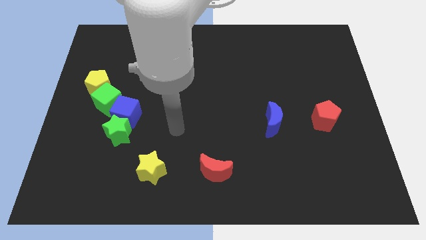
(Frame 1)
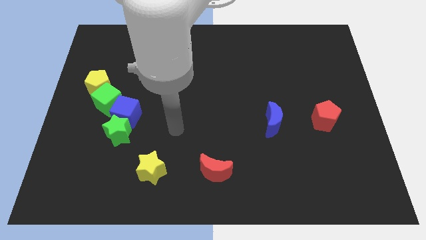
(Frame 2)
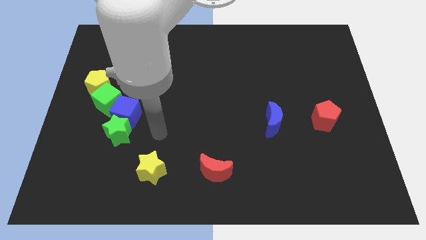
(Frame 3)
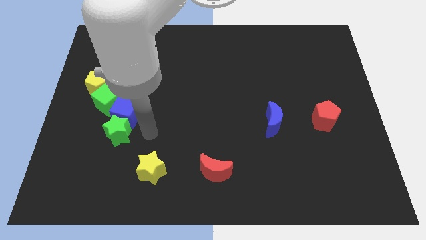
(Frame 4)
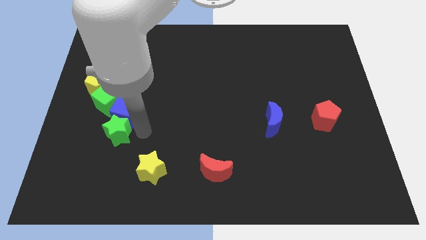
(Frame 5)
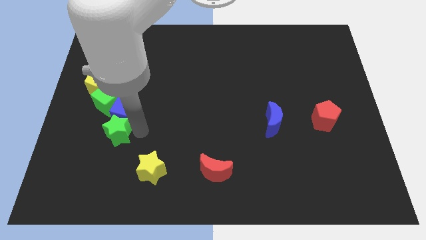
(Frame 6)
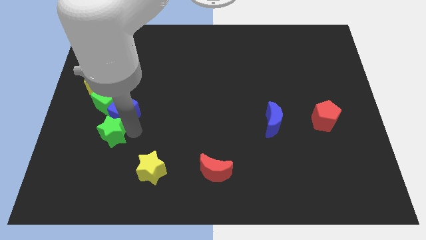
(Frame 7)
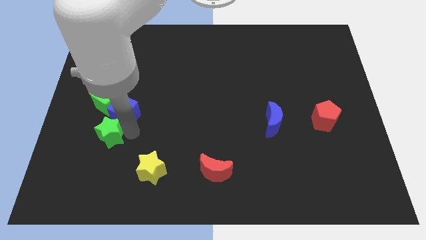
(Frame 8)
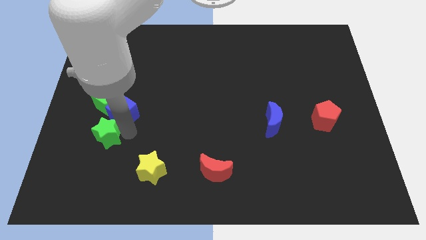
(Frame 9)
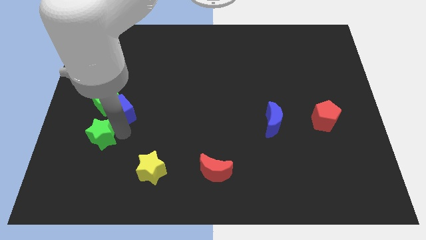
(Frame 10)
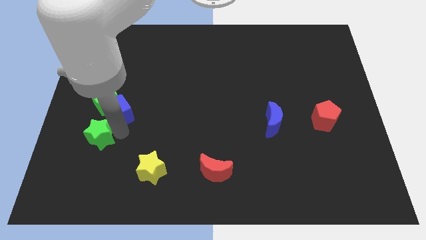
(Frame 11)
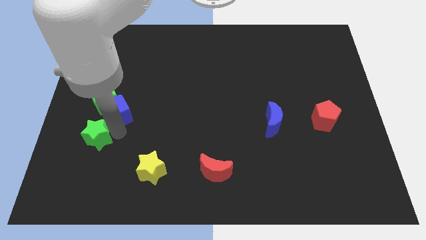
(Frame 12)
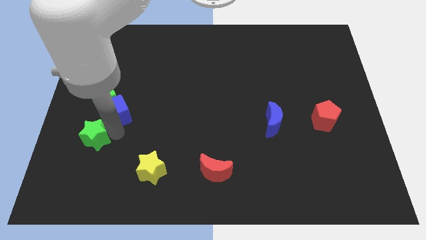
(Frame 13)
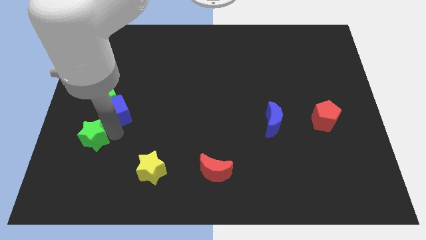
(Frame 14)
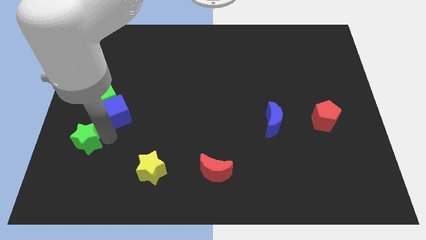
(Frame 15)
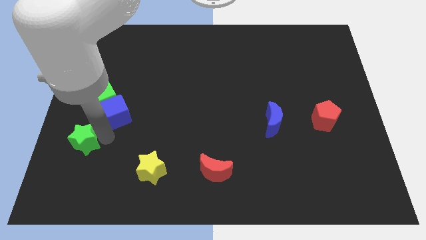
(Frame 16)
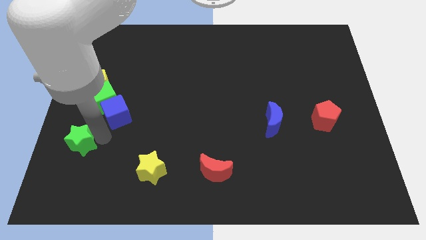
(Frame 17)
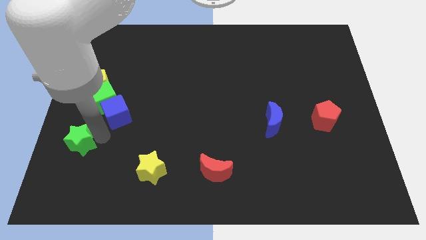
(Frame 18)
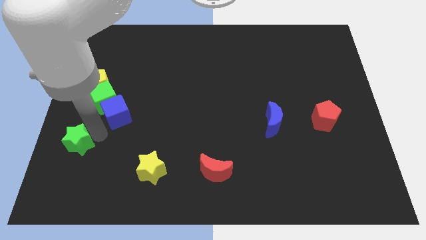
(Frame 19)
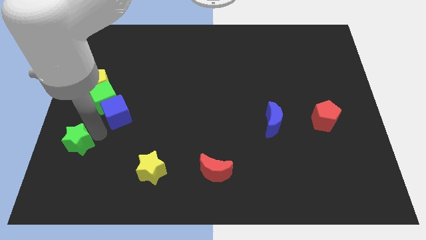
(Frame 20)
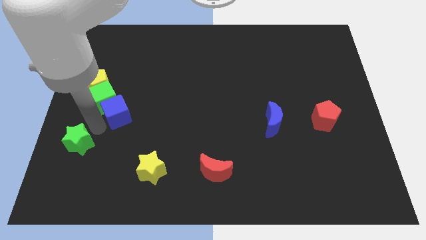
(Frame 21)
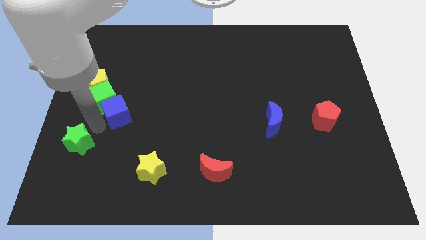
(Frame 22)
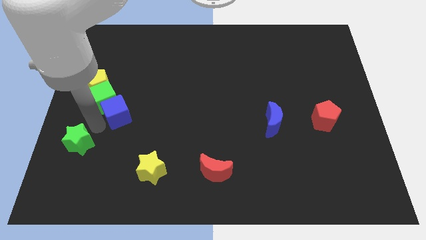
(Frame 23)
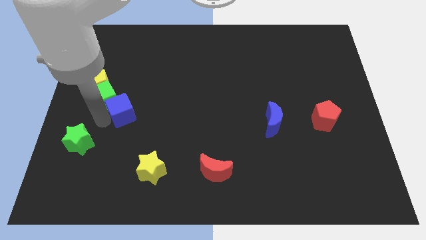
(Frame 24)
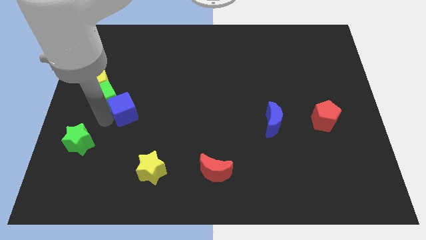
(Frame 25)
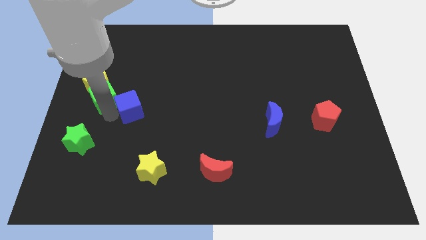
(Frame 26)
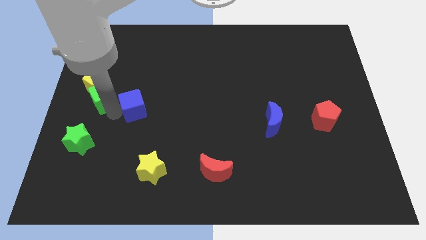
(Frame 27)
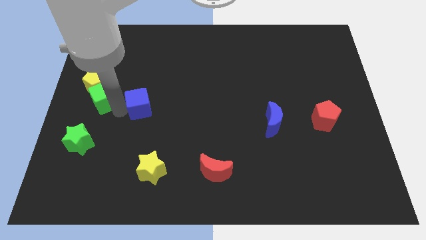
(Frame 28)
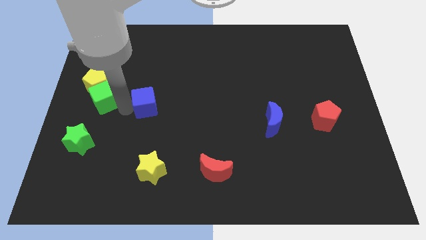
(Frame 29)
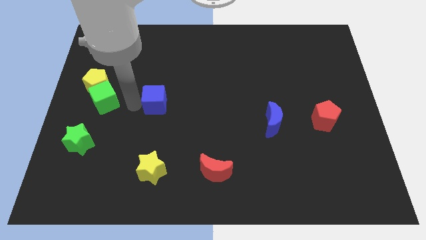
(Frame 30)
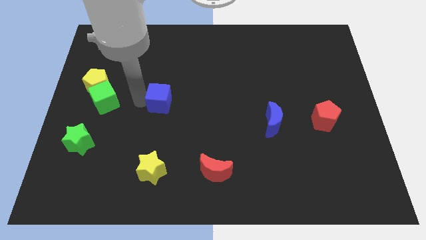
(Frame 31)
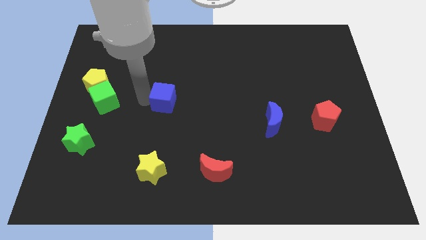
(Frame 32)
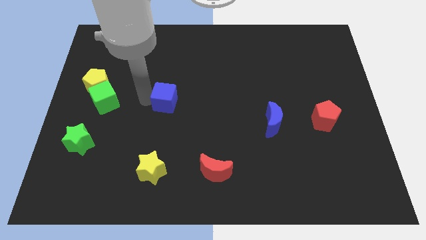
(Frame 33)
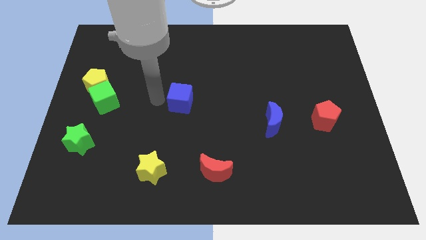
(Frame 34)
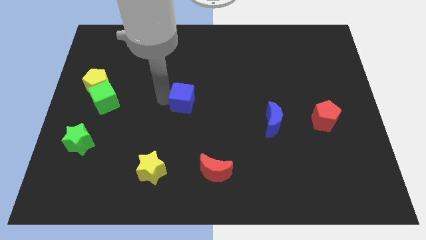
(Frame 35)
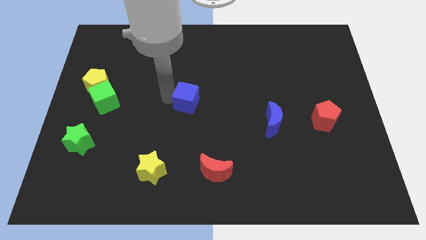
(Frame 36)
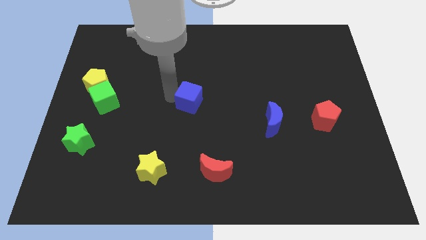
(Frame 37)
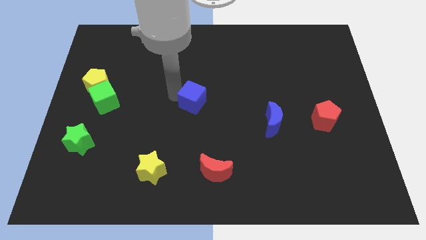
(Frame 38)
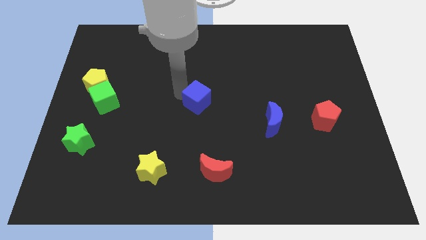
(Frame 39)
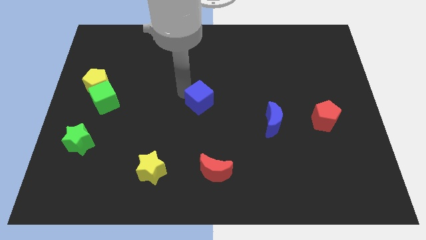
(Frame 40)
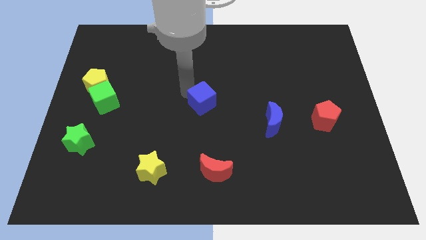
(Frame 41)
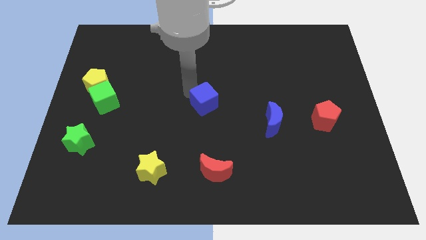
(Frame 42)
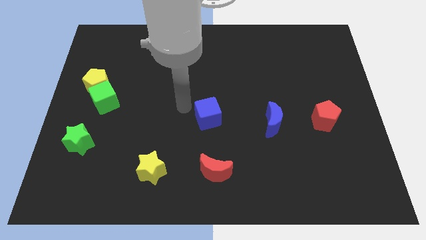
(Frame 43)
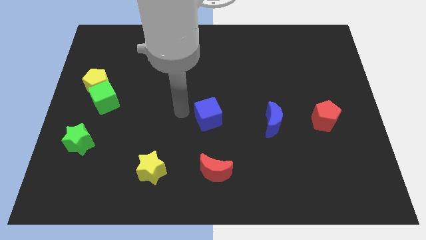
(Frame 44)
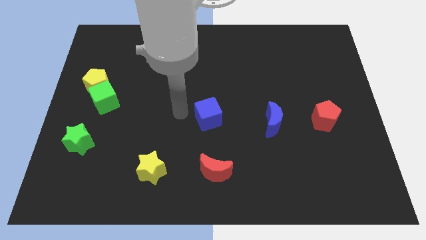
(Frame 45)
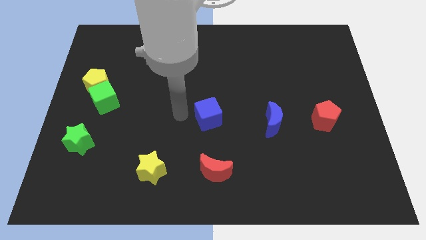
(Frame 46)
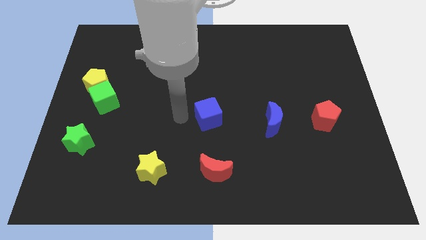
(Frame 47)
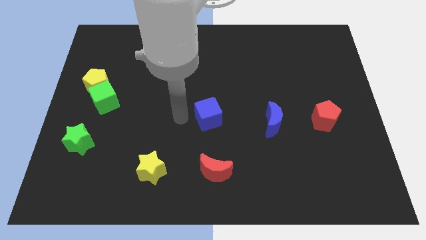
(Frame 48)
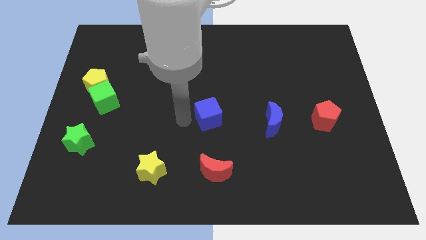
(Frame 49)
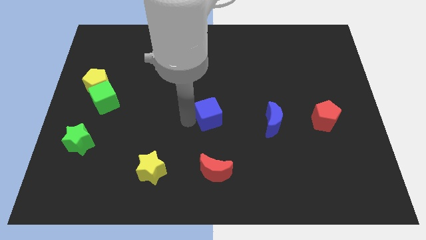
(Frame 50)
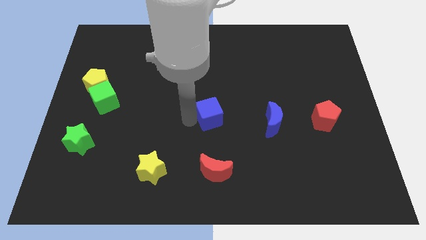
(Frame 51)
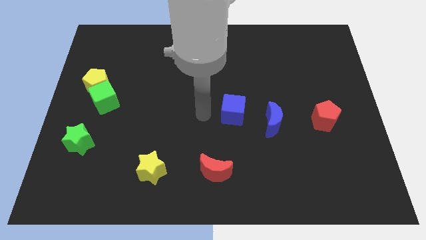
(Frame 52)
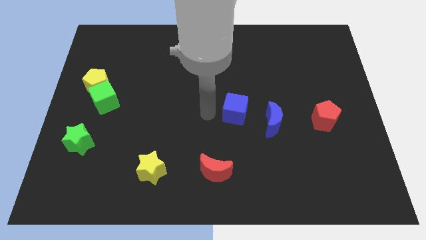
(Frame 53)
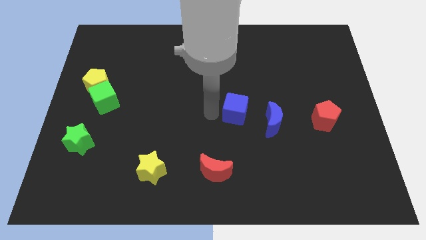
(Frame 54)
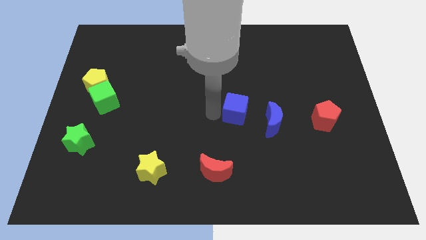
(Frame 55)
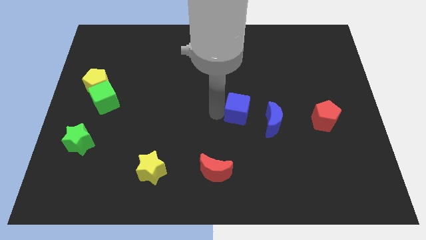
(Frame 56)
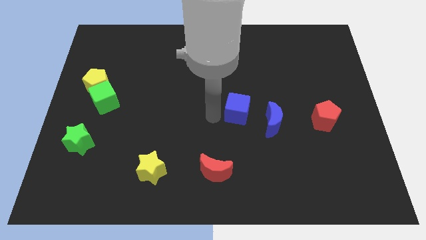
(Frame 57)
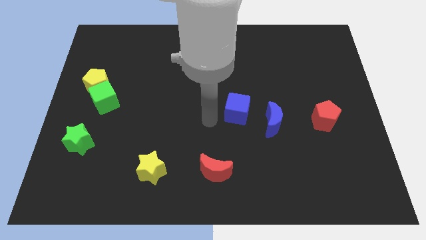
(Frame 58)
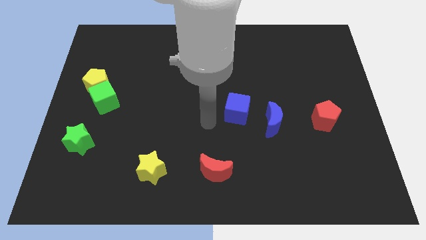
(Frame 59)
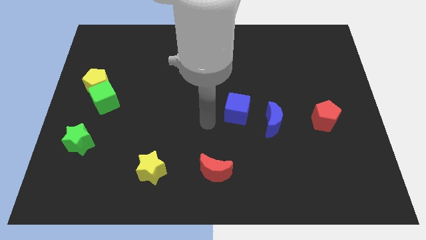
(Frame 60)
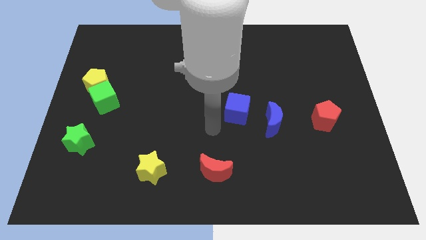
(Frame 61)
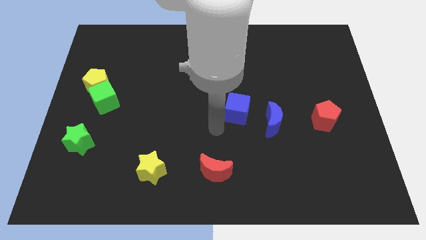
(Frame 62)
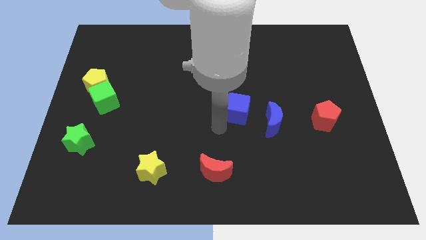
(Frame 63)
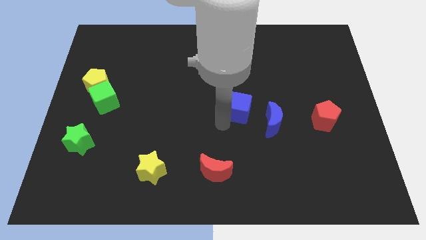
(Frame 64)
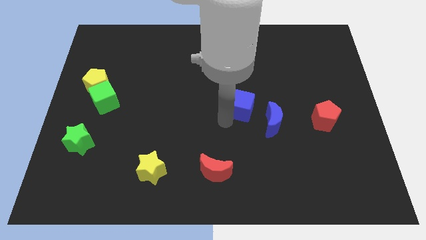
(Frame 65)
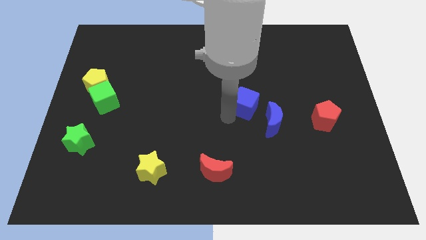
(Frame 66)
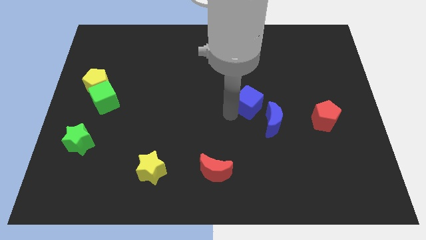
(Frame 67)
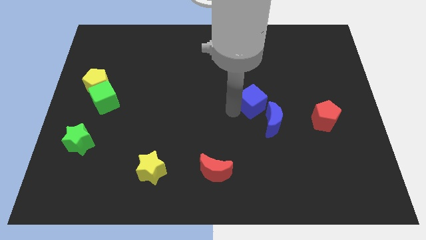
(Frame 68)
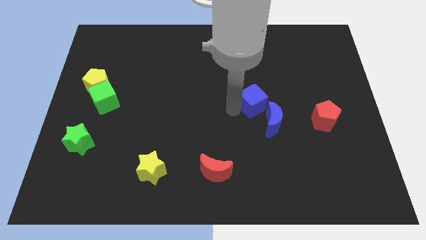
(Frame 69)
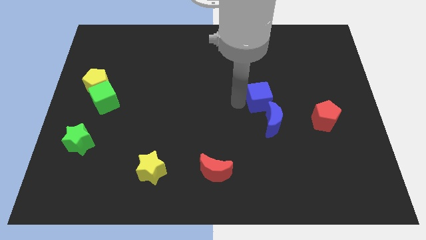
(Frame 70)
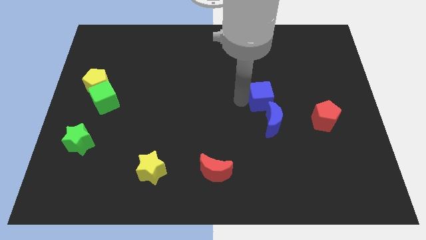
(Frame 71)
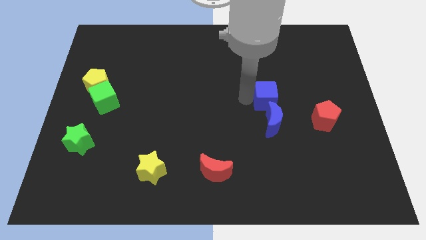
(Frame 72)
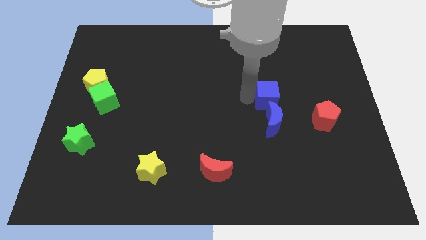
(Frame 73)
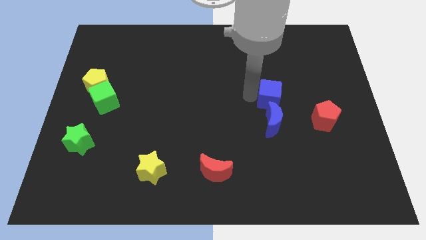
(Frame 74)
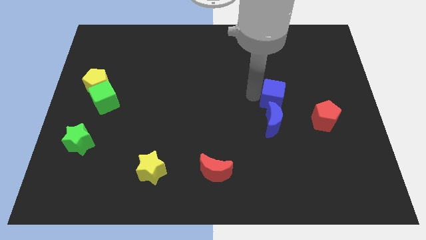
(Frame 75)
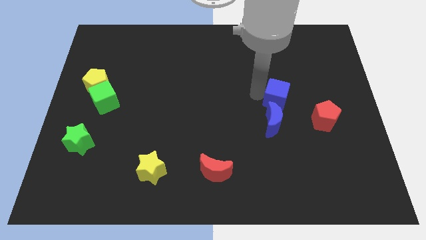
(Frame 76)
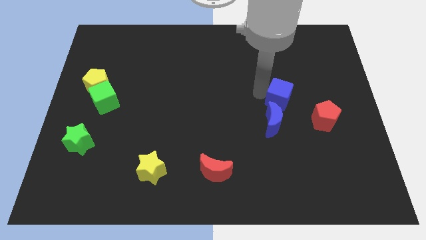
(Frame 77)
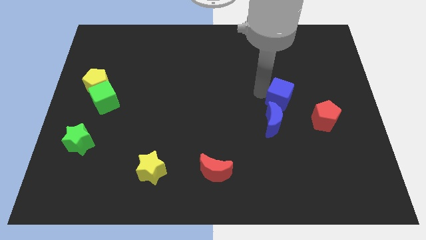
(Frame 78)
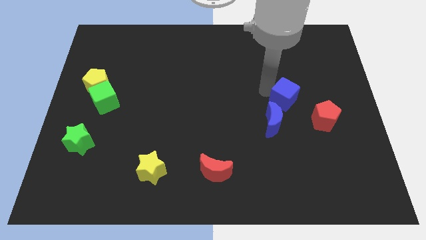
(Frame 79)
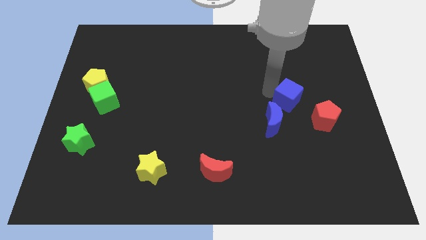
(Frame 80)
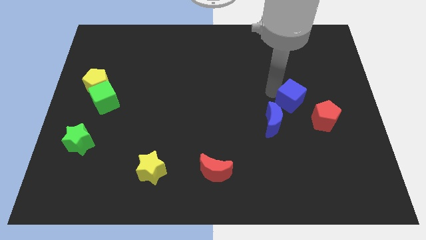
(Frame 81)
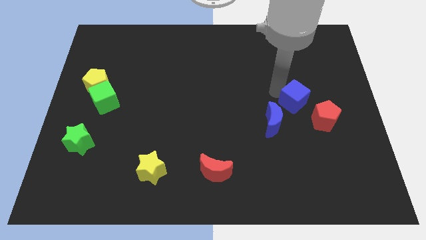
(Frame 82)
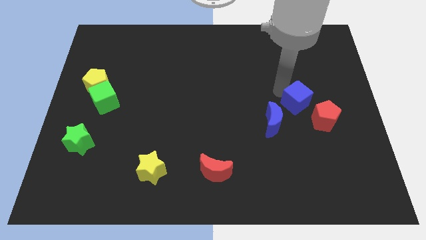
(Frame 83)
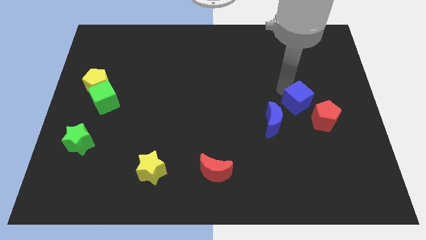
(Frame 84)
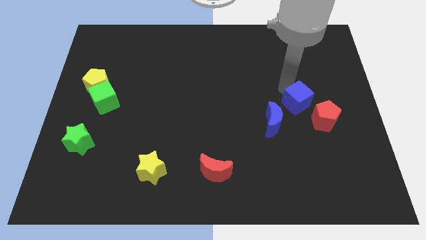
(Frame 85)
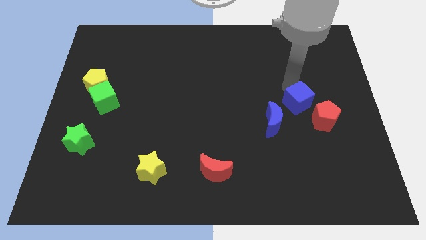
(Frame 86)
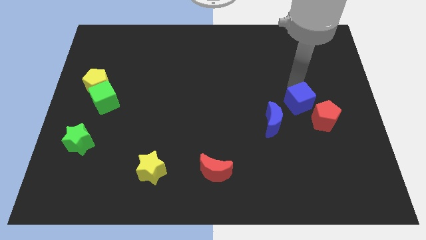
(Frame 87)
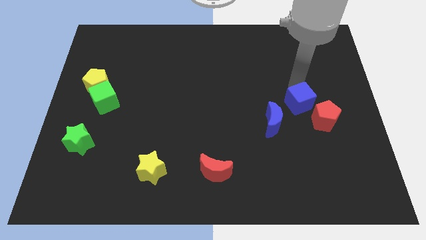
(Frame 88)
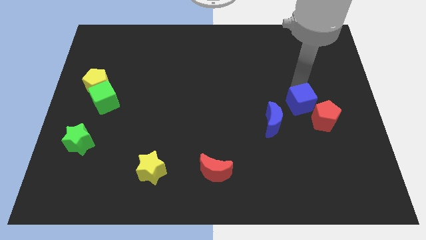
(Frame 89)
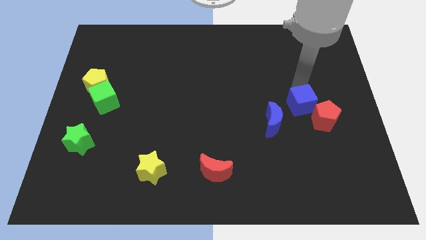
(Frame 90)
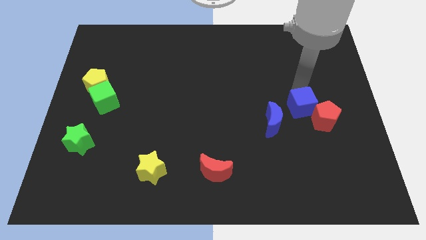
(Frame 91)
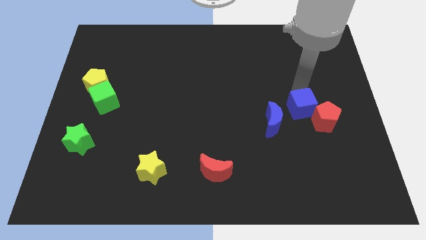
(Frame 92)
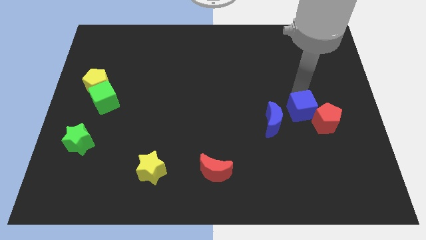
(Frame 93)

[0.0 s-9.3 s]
move the blue cube close to the red pentagon
